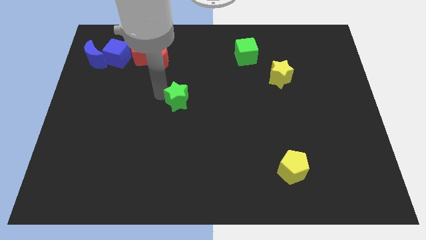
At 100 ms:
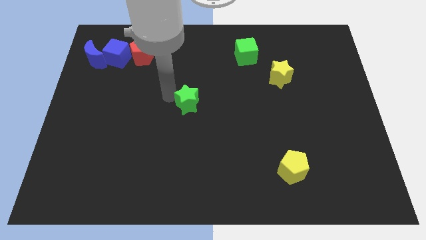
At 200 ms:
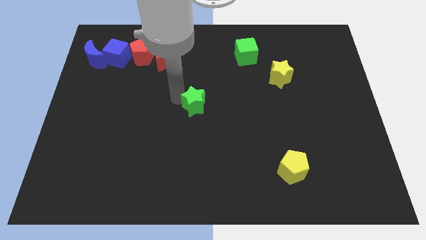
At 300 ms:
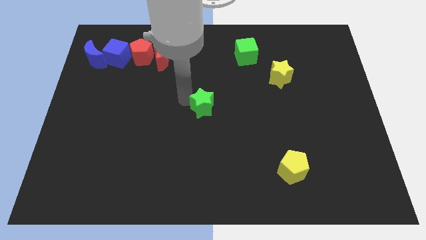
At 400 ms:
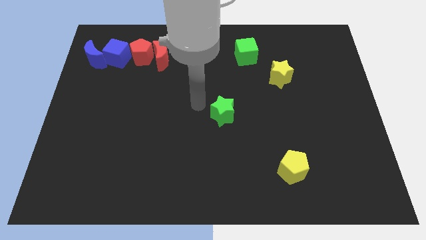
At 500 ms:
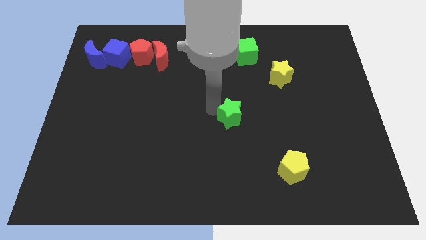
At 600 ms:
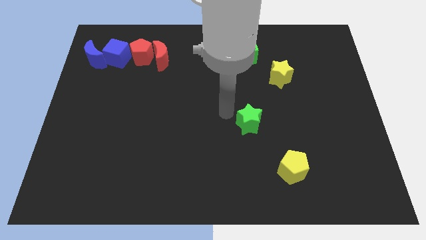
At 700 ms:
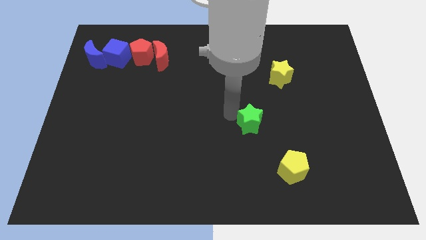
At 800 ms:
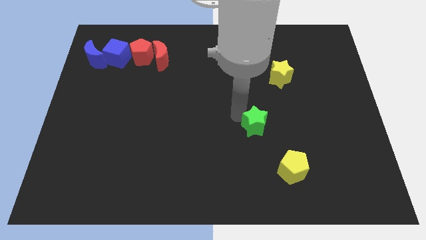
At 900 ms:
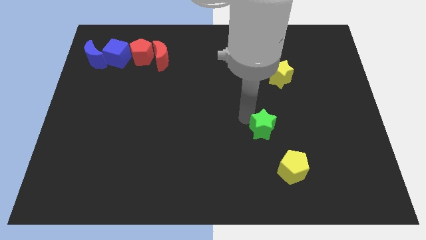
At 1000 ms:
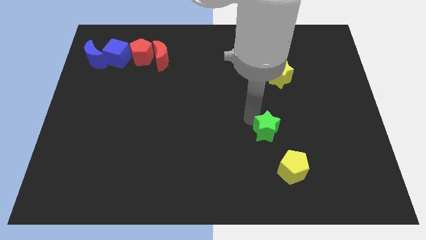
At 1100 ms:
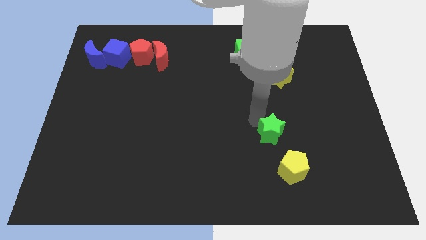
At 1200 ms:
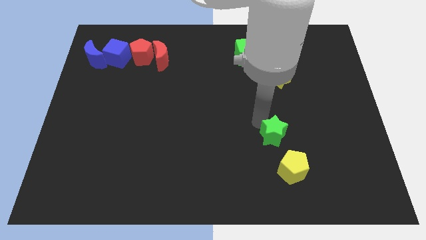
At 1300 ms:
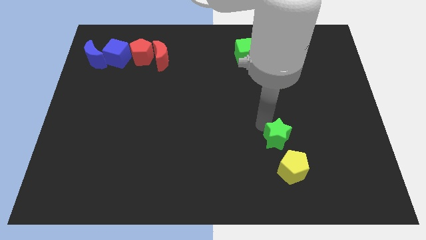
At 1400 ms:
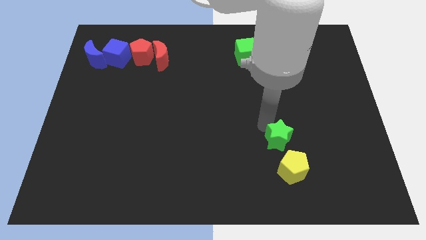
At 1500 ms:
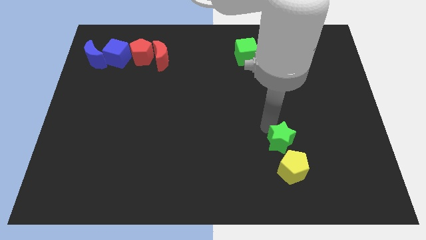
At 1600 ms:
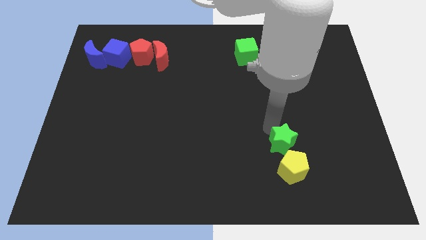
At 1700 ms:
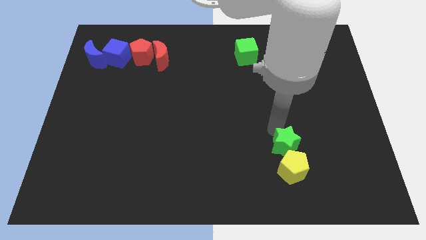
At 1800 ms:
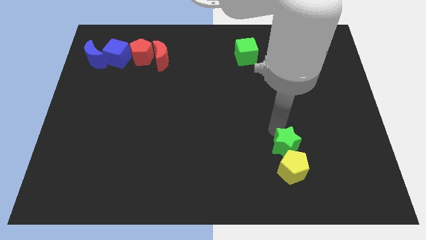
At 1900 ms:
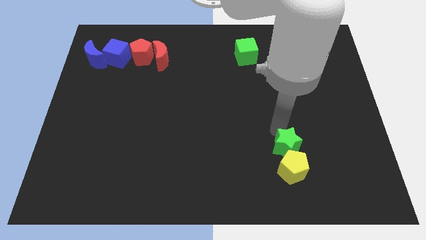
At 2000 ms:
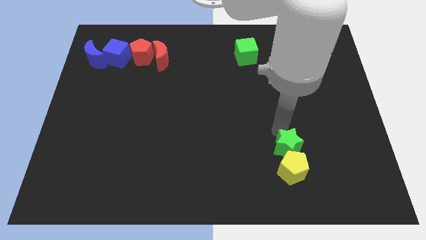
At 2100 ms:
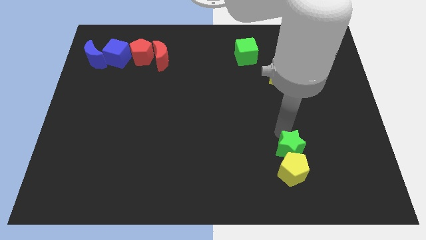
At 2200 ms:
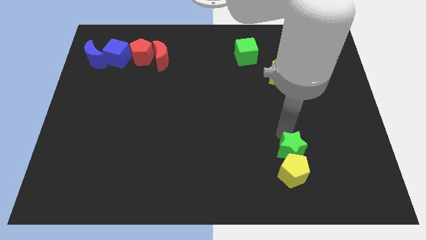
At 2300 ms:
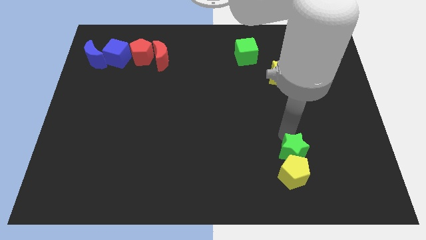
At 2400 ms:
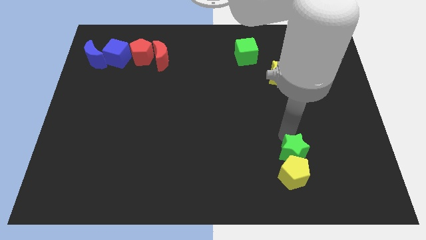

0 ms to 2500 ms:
place the green star above the yellow pentagon

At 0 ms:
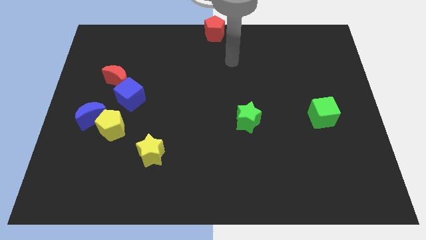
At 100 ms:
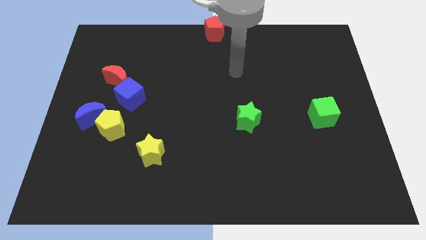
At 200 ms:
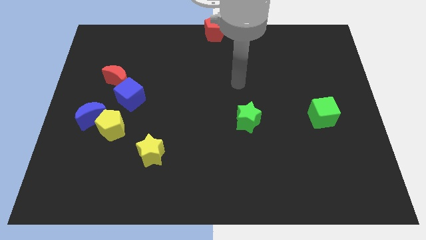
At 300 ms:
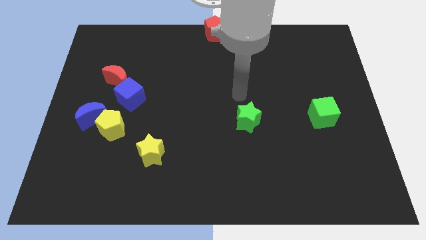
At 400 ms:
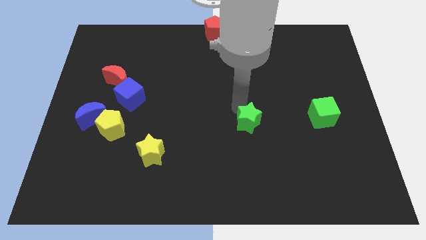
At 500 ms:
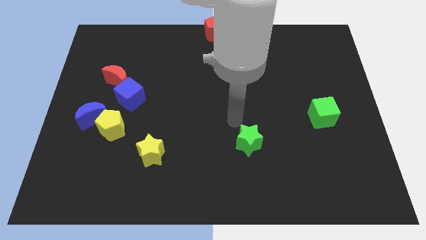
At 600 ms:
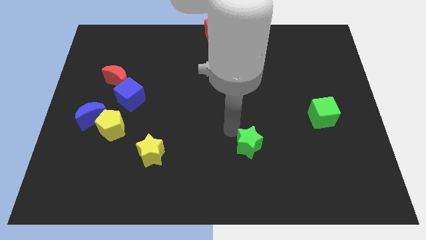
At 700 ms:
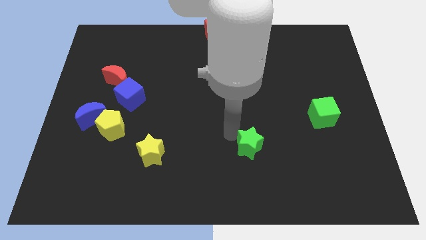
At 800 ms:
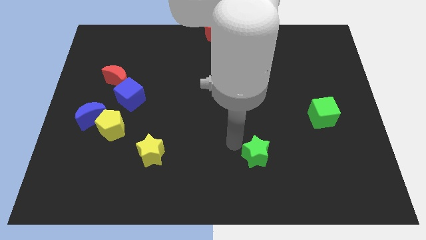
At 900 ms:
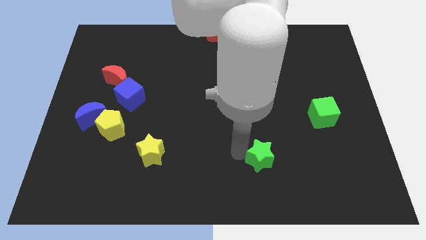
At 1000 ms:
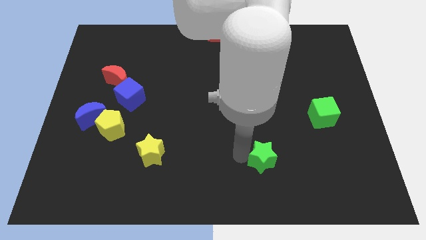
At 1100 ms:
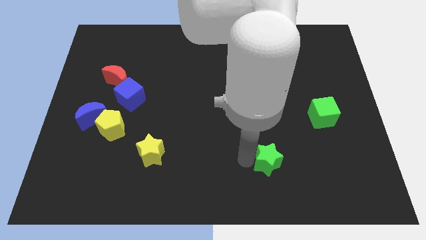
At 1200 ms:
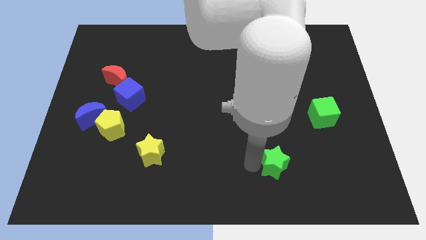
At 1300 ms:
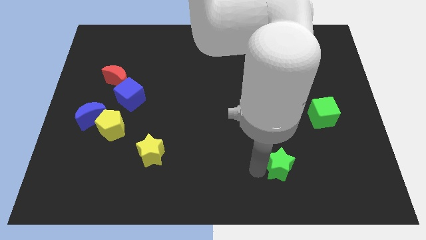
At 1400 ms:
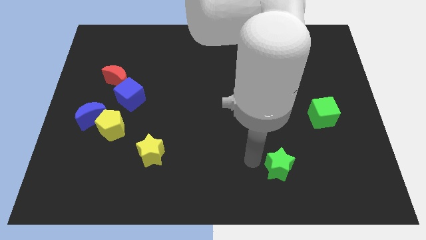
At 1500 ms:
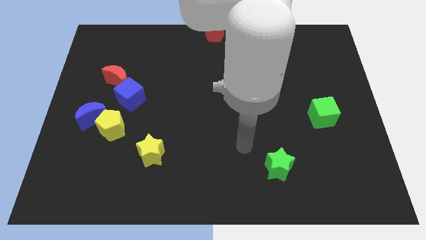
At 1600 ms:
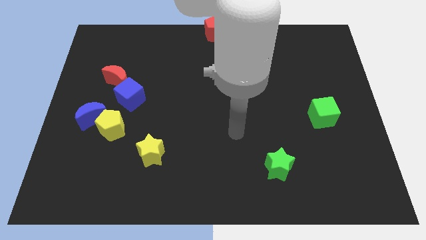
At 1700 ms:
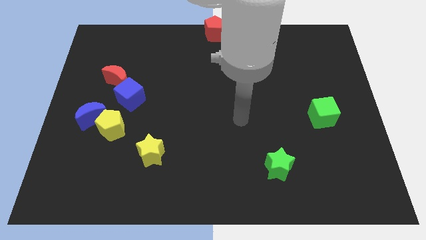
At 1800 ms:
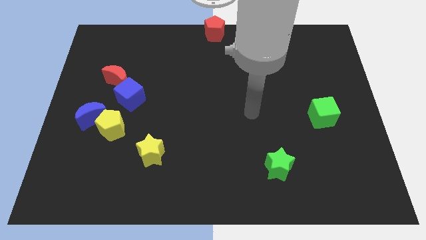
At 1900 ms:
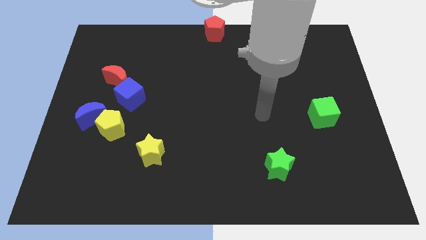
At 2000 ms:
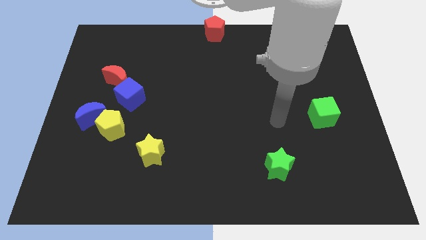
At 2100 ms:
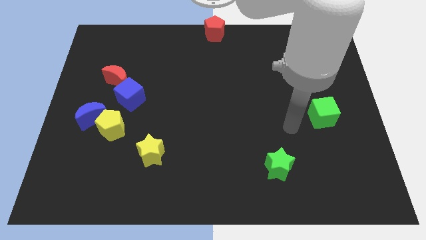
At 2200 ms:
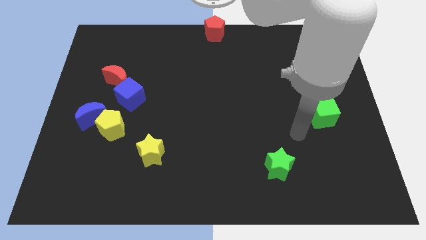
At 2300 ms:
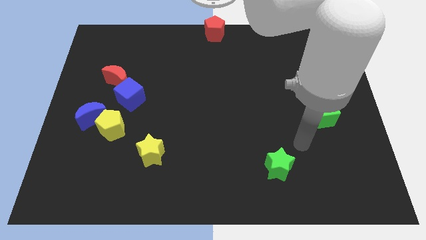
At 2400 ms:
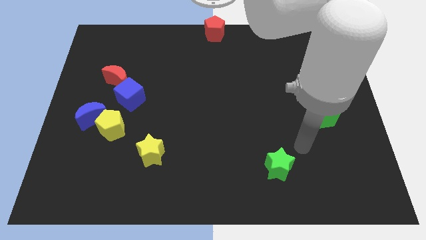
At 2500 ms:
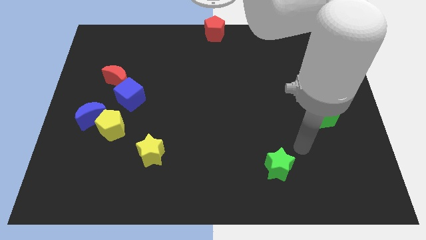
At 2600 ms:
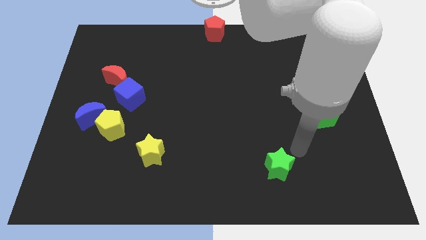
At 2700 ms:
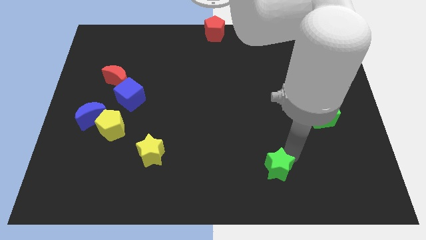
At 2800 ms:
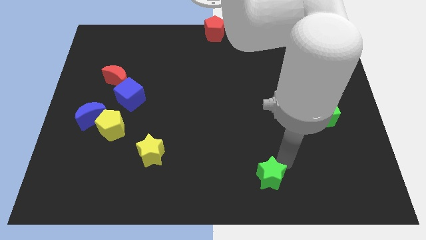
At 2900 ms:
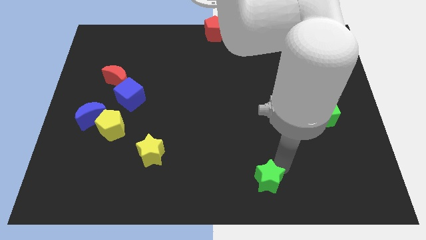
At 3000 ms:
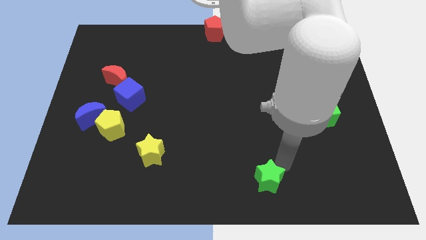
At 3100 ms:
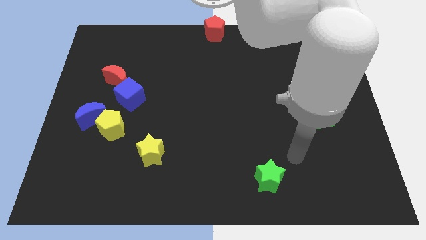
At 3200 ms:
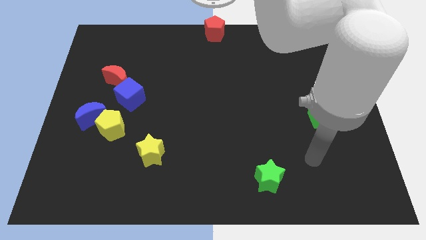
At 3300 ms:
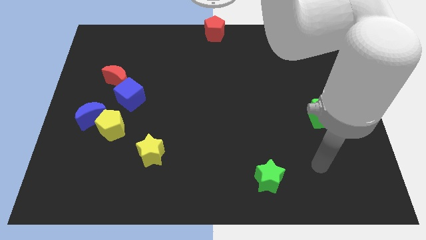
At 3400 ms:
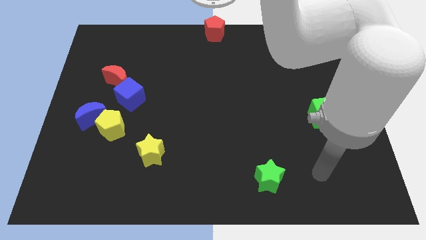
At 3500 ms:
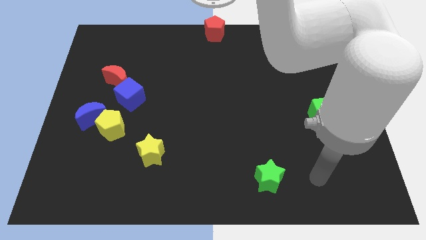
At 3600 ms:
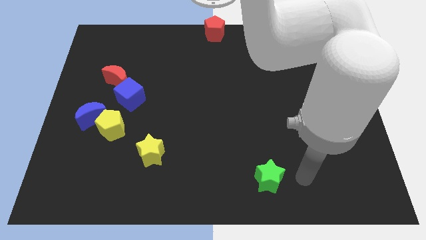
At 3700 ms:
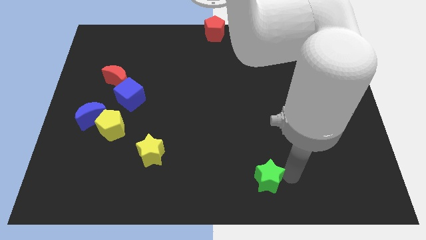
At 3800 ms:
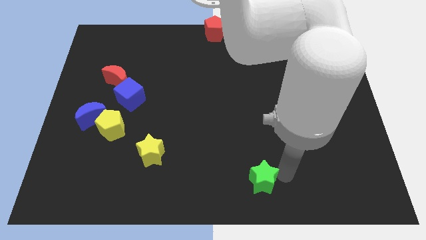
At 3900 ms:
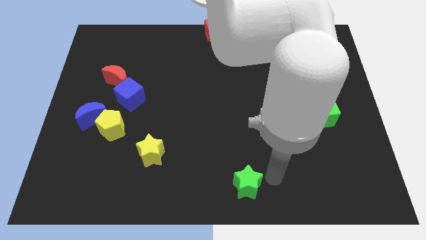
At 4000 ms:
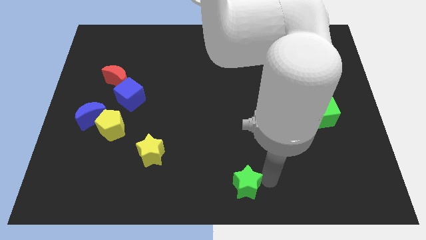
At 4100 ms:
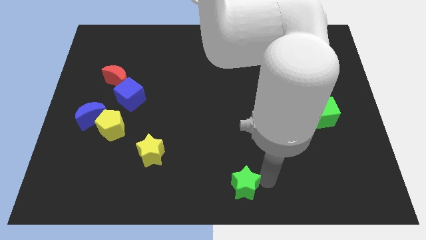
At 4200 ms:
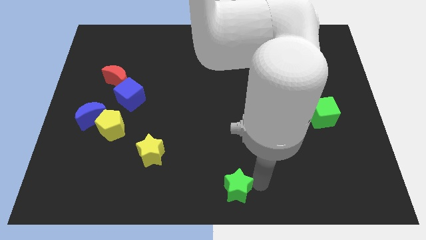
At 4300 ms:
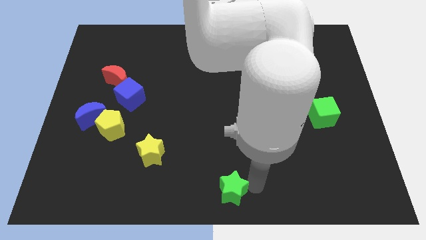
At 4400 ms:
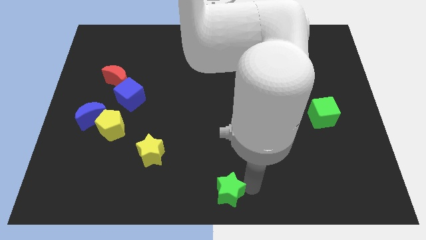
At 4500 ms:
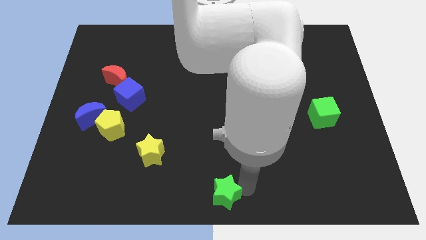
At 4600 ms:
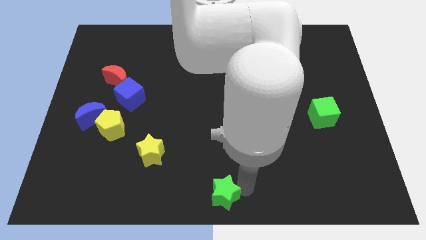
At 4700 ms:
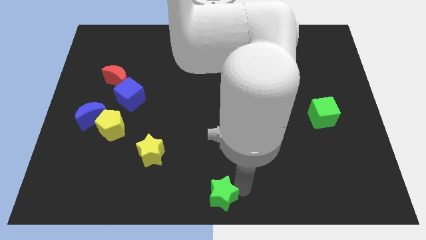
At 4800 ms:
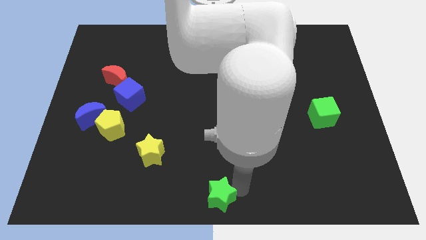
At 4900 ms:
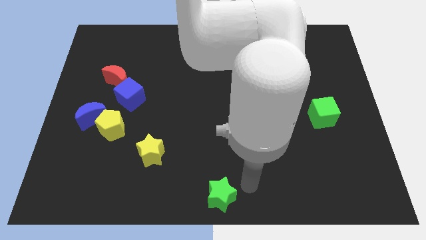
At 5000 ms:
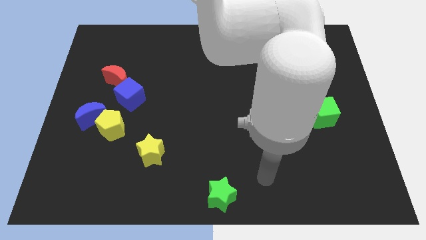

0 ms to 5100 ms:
place the green star at the bottom center of the board

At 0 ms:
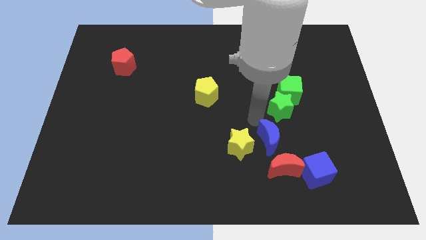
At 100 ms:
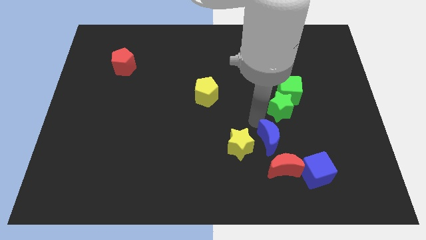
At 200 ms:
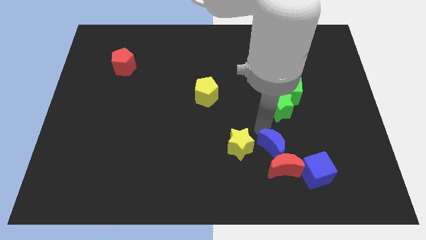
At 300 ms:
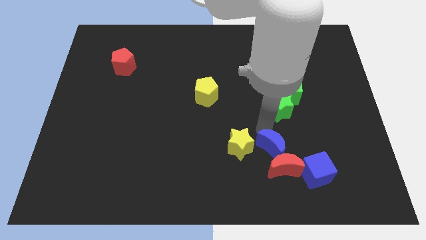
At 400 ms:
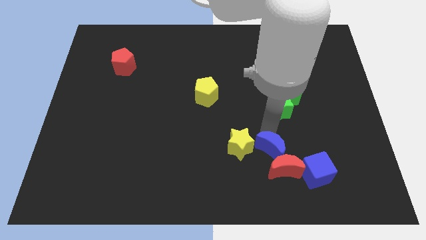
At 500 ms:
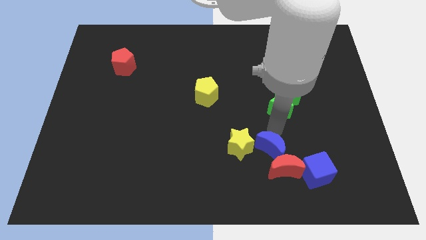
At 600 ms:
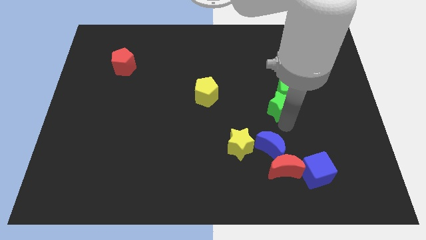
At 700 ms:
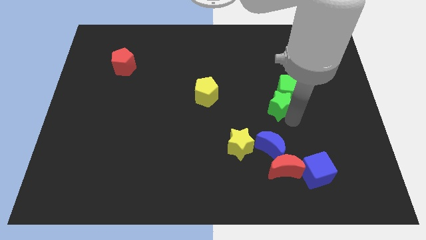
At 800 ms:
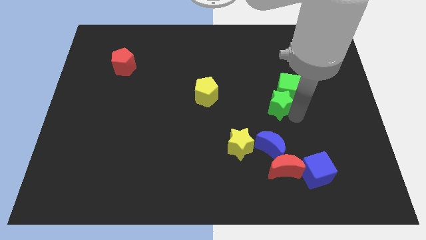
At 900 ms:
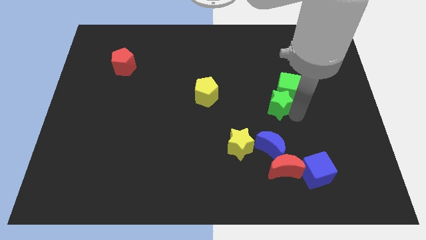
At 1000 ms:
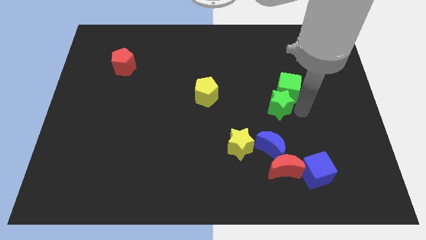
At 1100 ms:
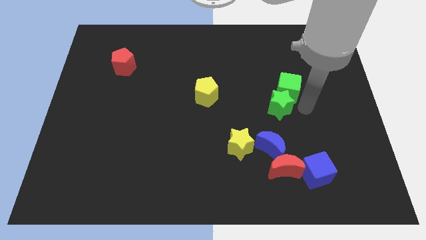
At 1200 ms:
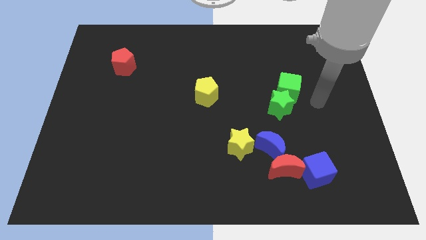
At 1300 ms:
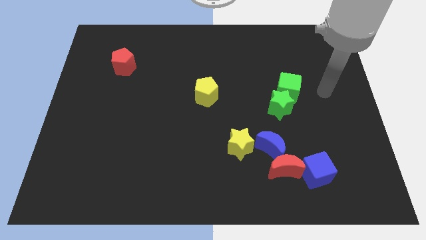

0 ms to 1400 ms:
tap the green star
